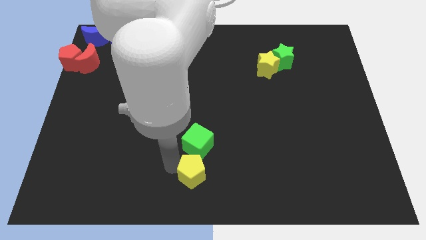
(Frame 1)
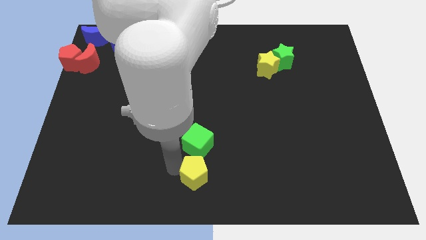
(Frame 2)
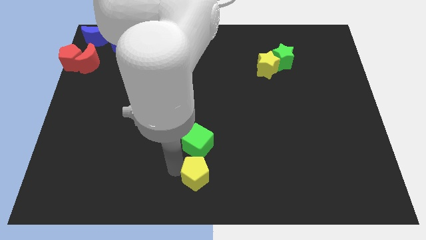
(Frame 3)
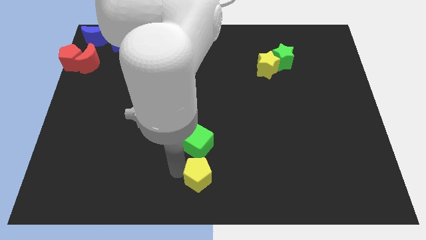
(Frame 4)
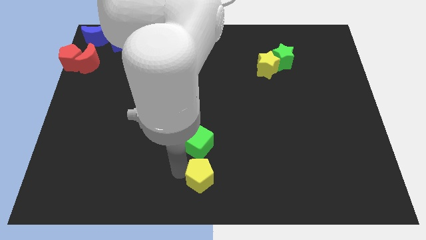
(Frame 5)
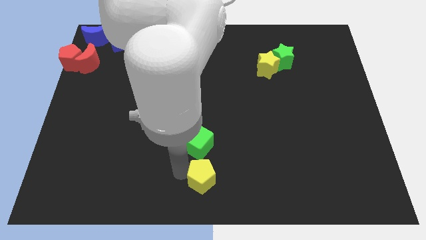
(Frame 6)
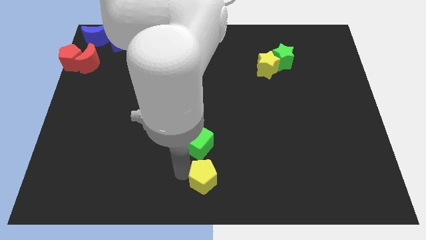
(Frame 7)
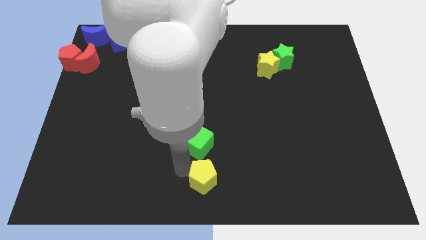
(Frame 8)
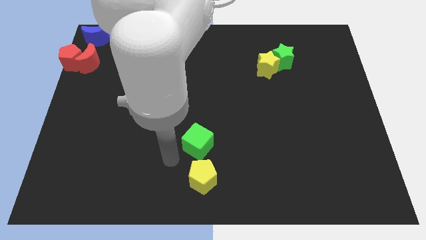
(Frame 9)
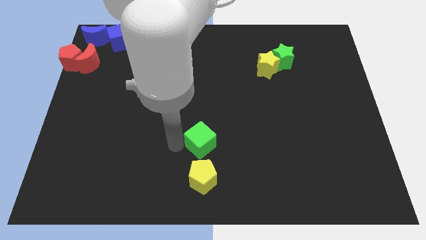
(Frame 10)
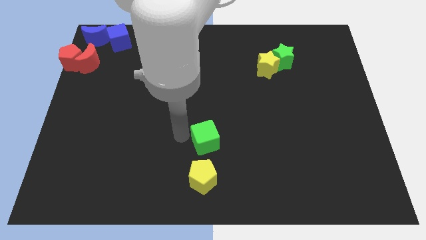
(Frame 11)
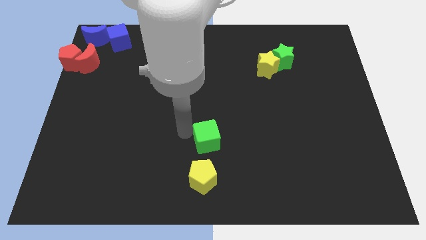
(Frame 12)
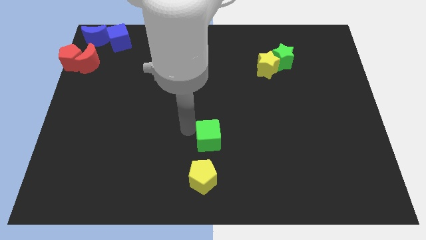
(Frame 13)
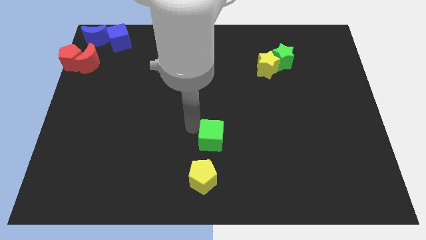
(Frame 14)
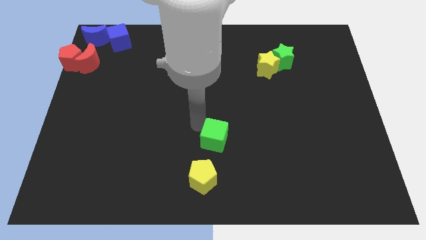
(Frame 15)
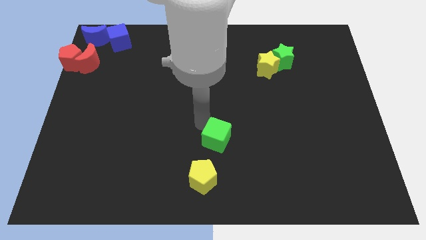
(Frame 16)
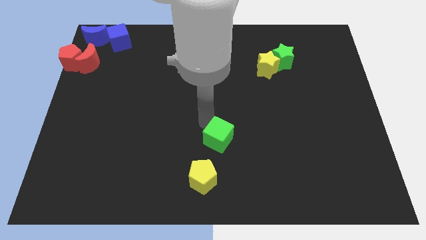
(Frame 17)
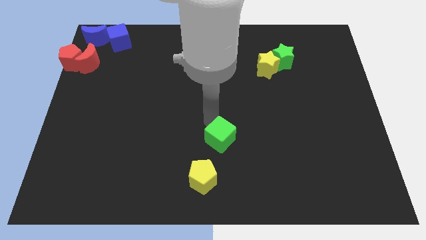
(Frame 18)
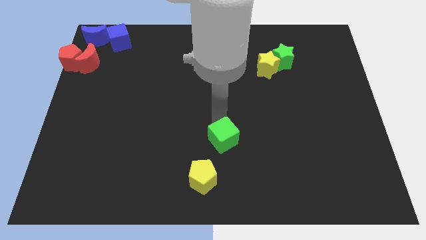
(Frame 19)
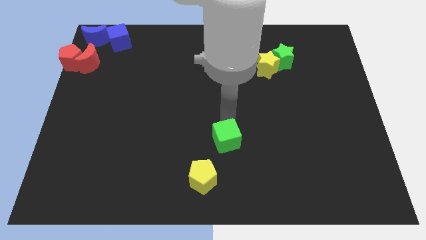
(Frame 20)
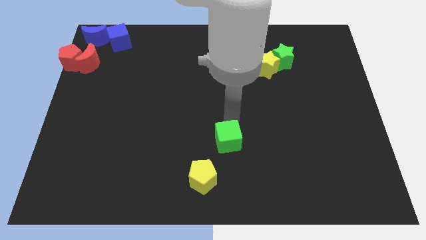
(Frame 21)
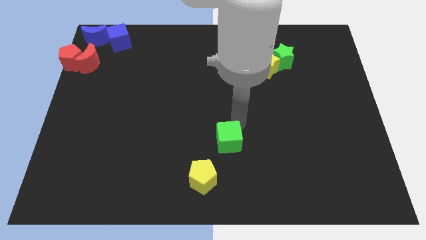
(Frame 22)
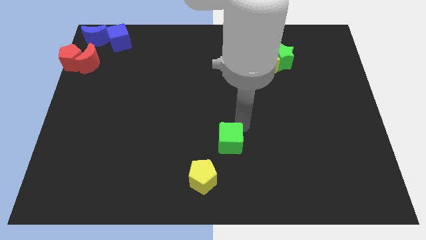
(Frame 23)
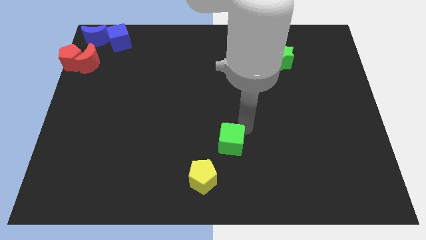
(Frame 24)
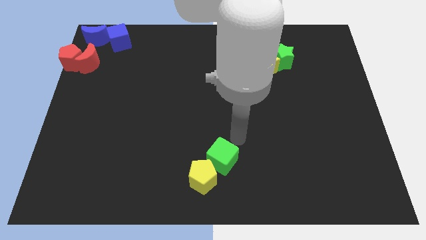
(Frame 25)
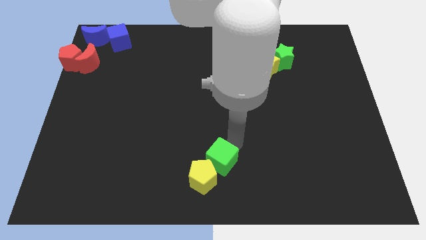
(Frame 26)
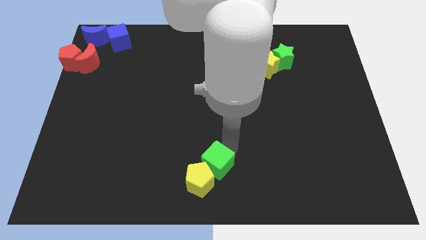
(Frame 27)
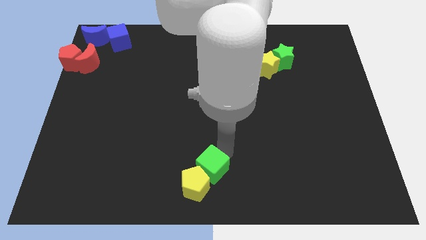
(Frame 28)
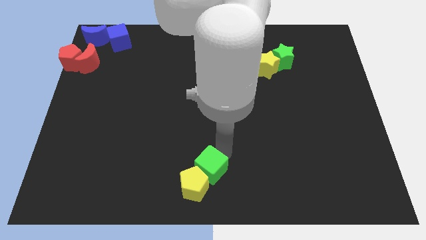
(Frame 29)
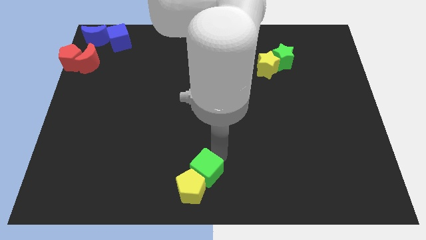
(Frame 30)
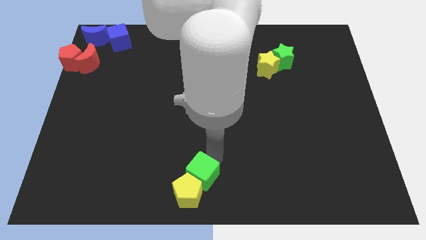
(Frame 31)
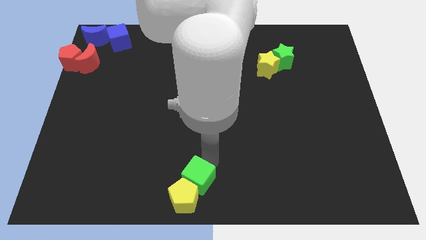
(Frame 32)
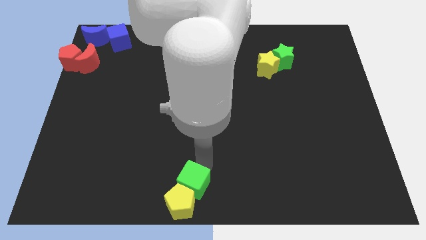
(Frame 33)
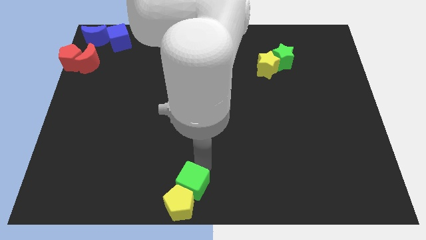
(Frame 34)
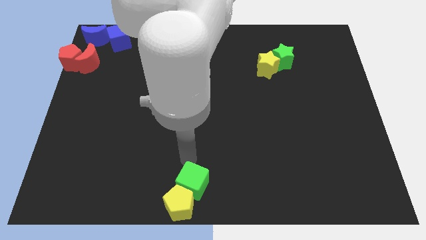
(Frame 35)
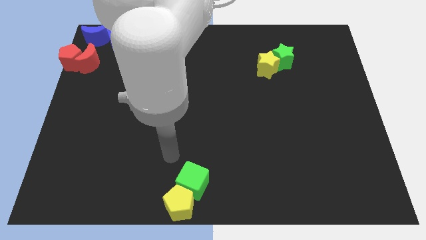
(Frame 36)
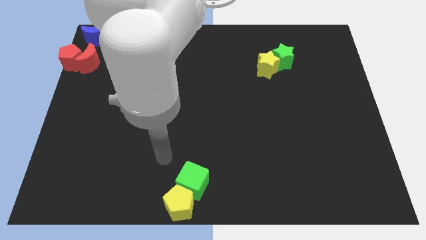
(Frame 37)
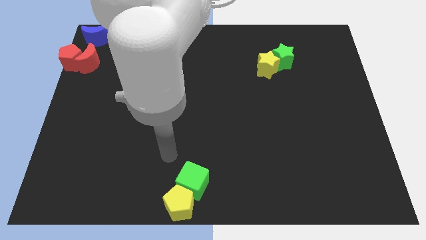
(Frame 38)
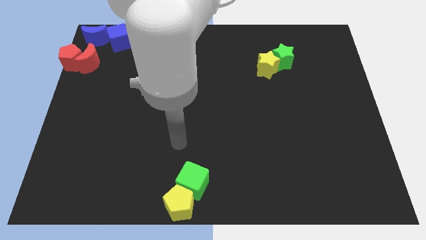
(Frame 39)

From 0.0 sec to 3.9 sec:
move green cube and yellow pentagon to the bottom center

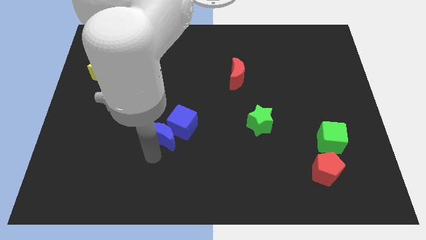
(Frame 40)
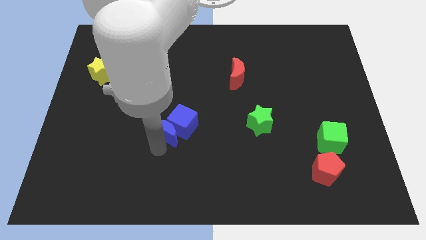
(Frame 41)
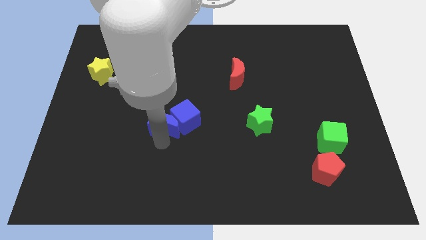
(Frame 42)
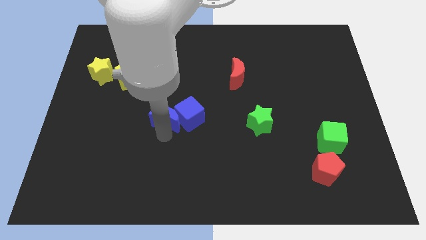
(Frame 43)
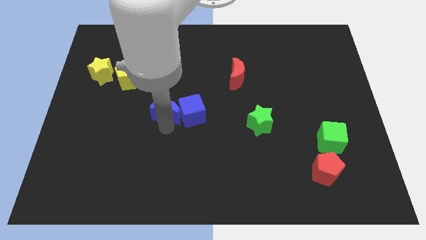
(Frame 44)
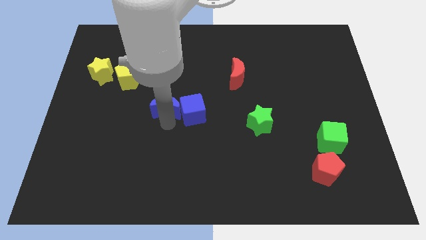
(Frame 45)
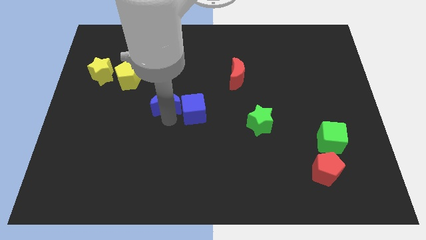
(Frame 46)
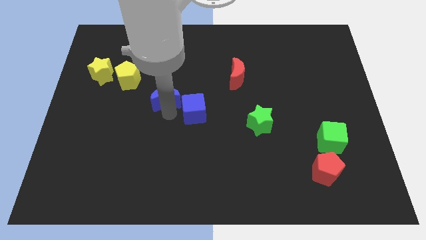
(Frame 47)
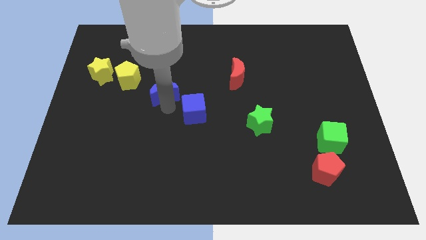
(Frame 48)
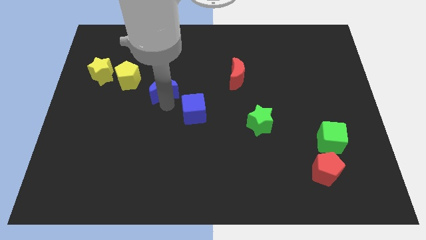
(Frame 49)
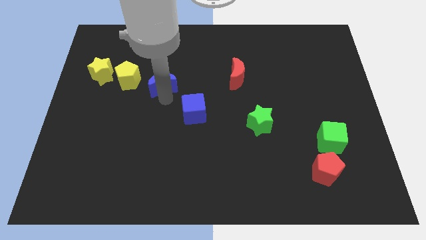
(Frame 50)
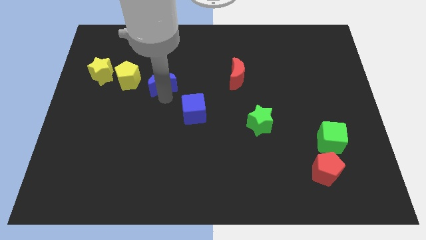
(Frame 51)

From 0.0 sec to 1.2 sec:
place the blue moon diagonally top left to blue cube

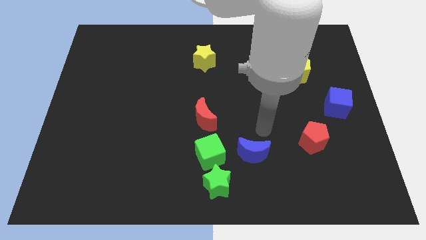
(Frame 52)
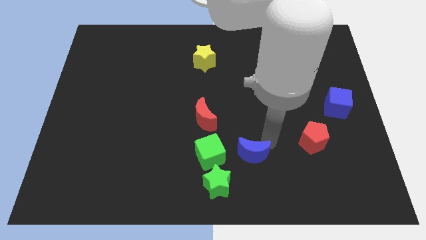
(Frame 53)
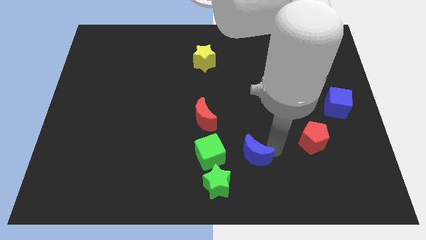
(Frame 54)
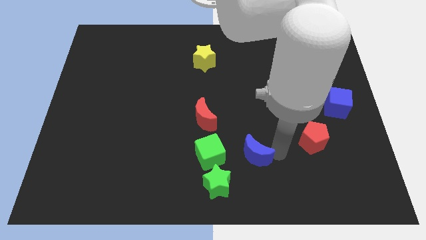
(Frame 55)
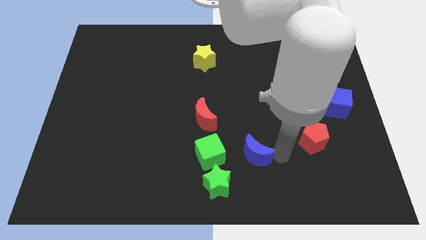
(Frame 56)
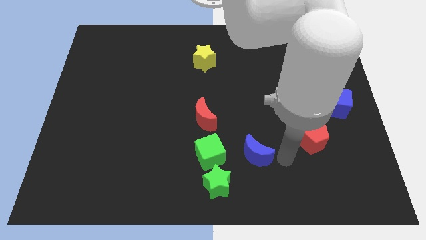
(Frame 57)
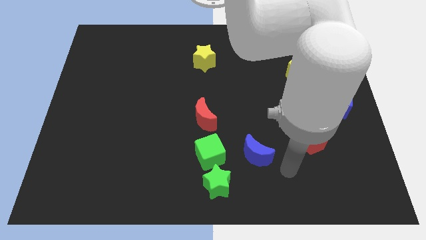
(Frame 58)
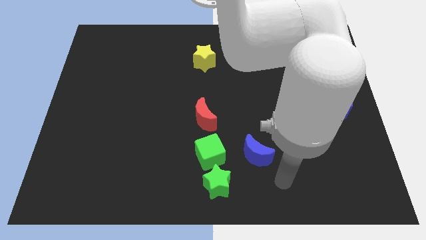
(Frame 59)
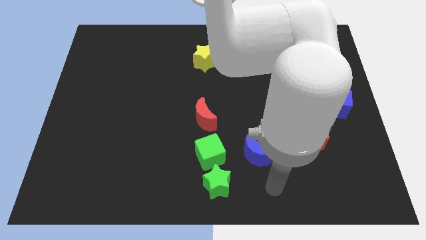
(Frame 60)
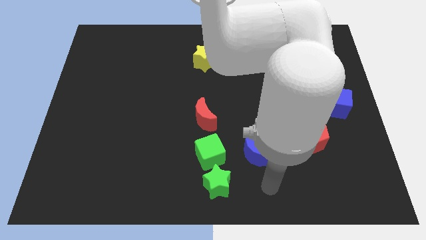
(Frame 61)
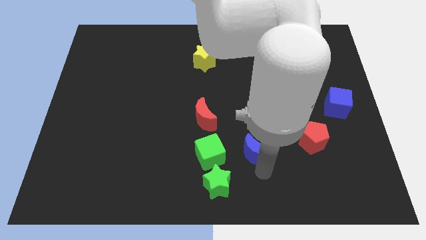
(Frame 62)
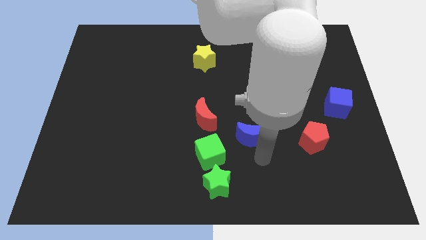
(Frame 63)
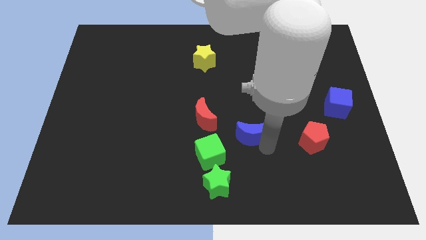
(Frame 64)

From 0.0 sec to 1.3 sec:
push the blue crescent slightly to the top

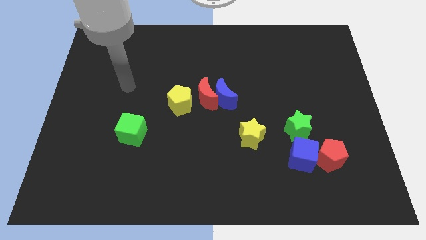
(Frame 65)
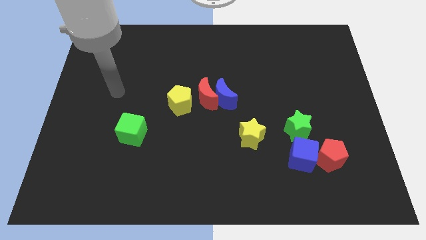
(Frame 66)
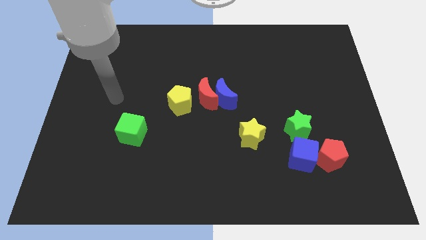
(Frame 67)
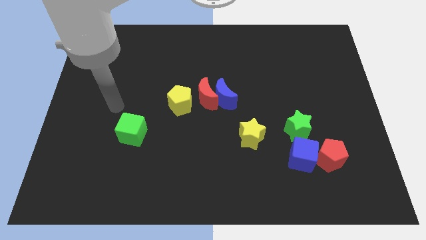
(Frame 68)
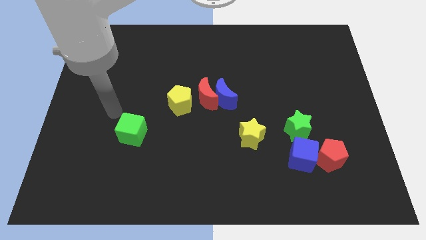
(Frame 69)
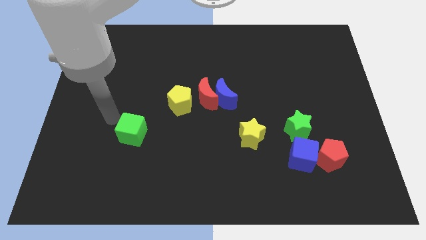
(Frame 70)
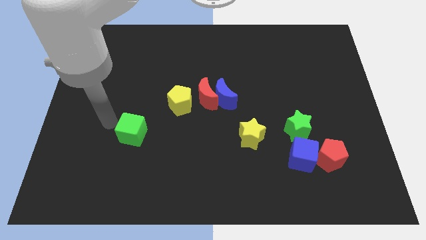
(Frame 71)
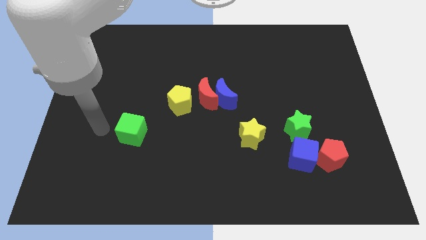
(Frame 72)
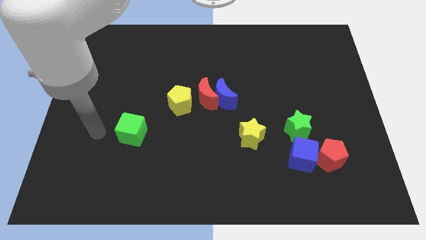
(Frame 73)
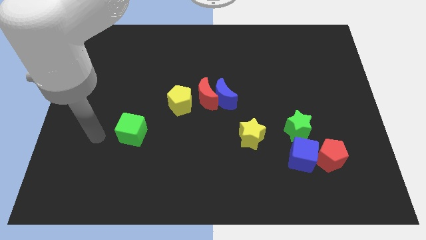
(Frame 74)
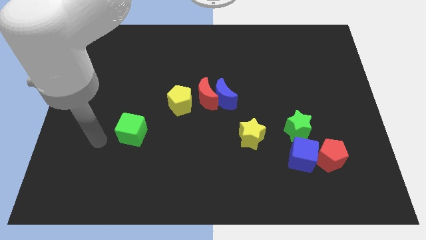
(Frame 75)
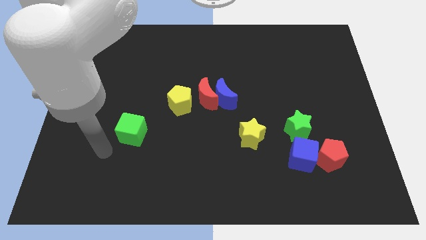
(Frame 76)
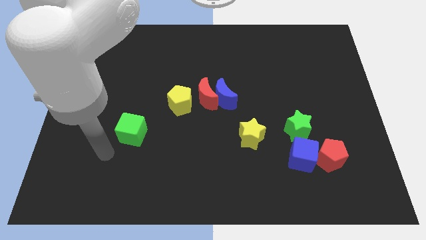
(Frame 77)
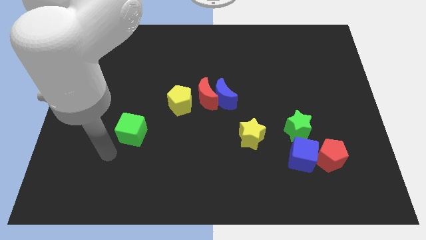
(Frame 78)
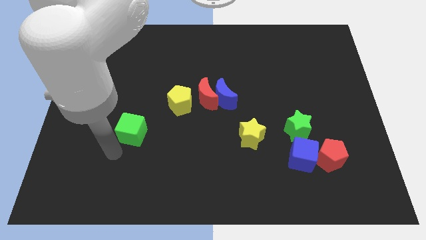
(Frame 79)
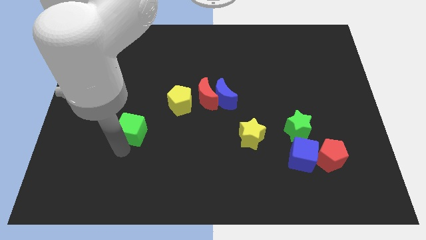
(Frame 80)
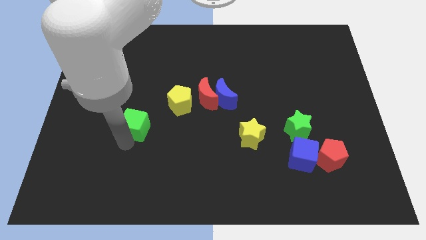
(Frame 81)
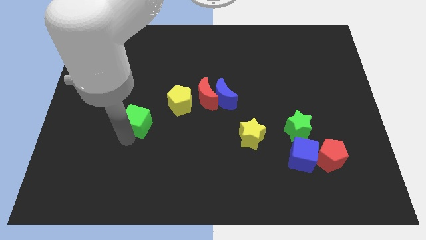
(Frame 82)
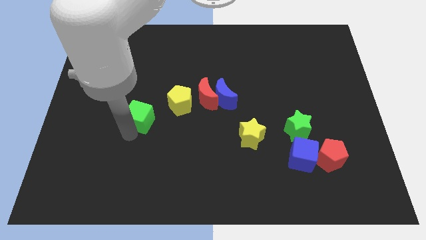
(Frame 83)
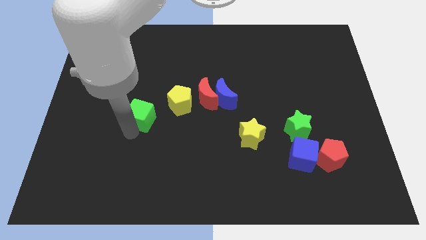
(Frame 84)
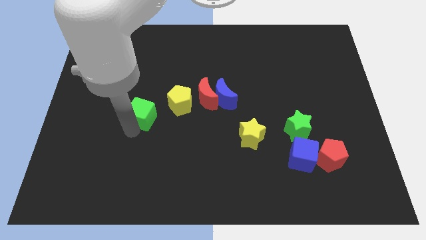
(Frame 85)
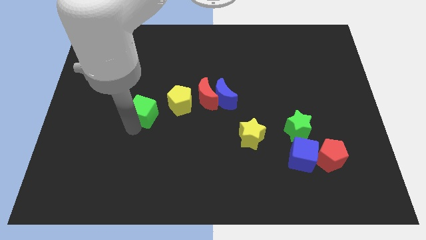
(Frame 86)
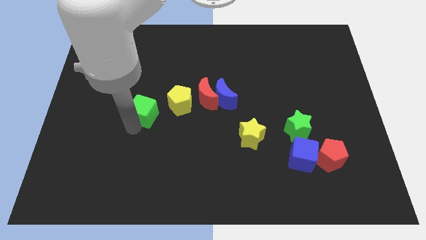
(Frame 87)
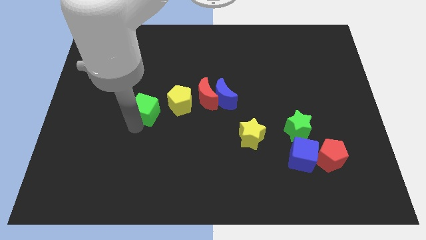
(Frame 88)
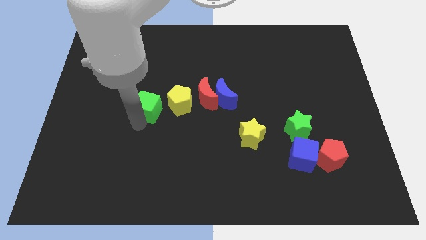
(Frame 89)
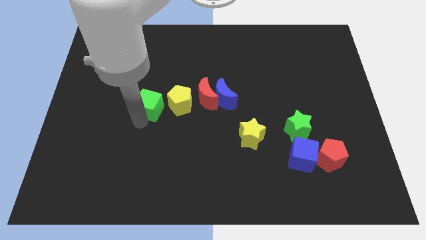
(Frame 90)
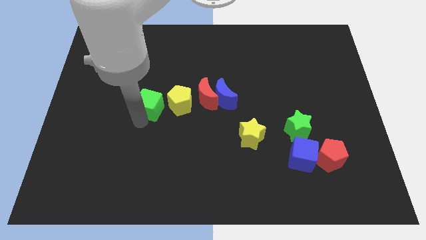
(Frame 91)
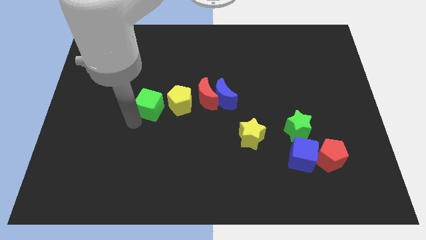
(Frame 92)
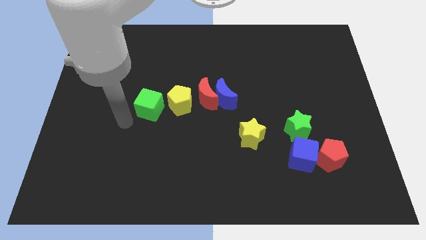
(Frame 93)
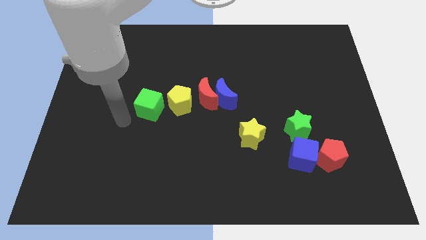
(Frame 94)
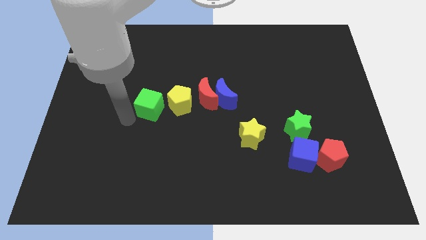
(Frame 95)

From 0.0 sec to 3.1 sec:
push green cube towards yellow pentagon
